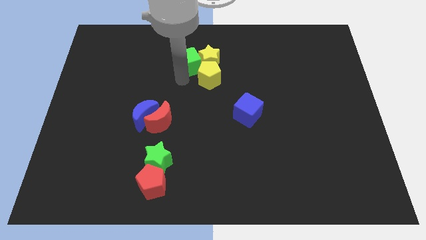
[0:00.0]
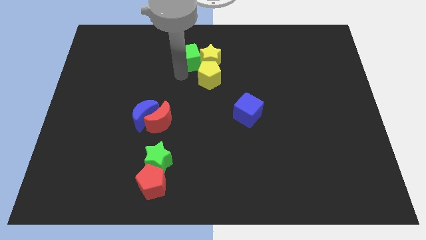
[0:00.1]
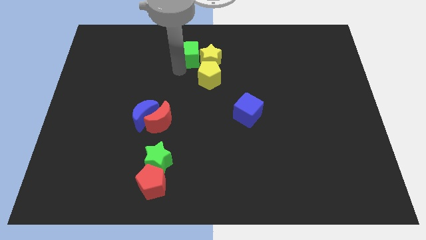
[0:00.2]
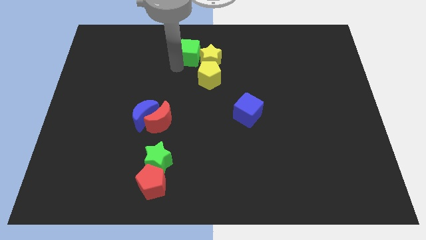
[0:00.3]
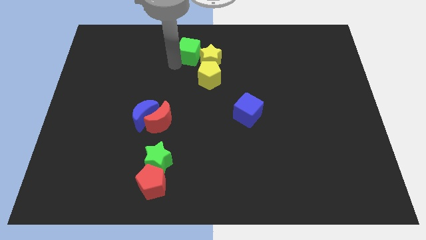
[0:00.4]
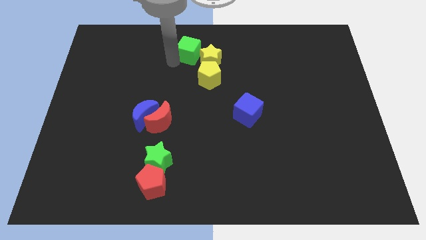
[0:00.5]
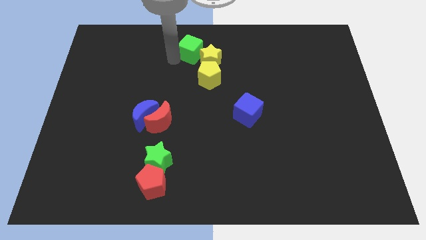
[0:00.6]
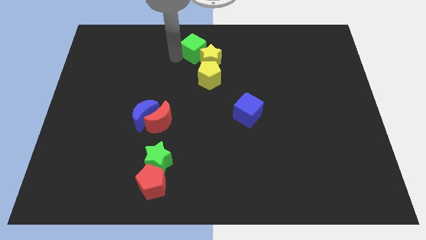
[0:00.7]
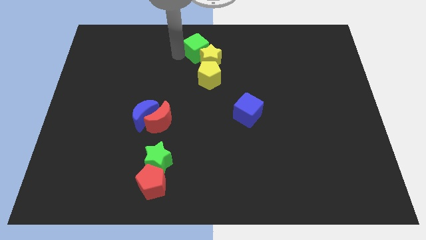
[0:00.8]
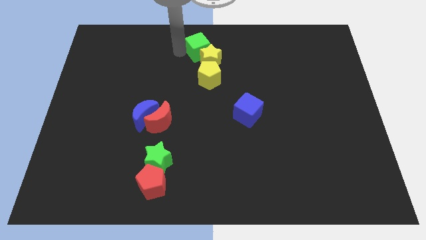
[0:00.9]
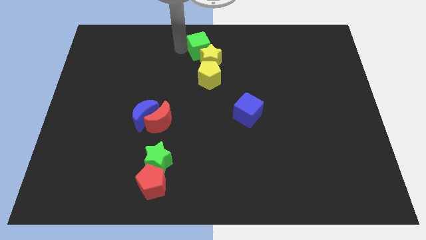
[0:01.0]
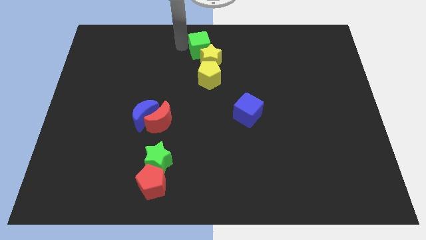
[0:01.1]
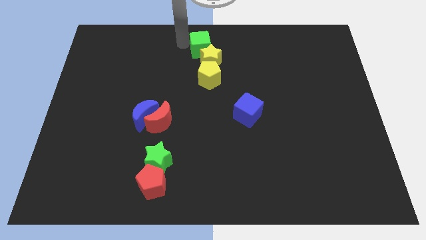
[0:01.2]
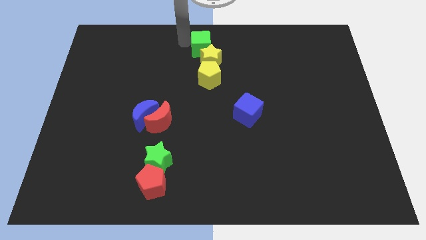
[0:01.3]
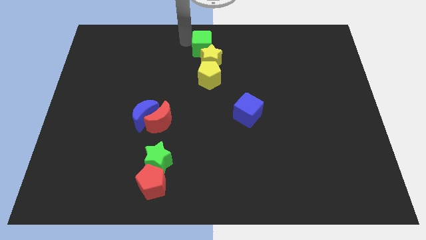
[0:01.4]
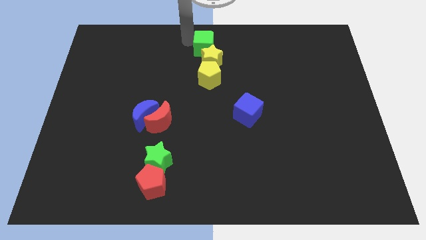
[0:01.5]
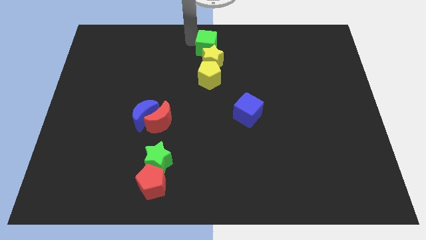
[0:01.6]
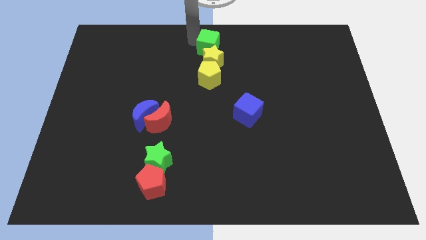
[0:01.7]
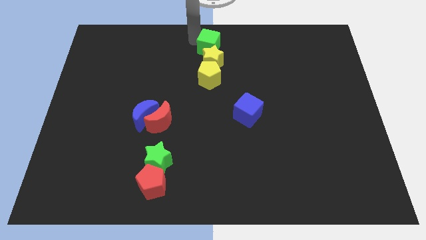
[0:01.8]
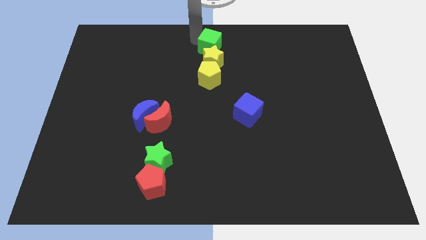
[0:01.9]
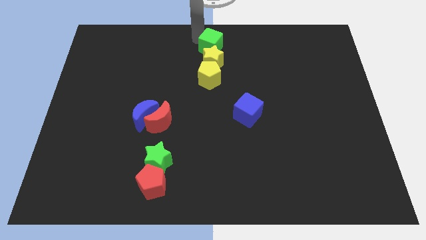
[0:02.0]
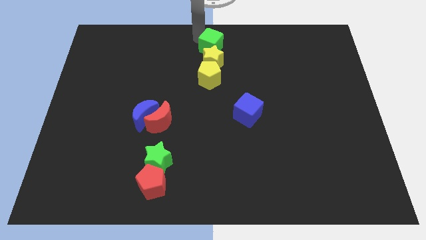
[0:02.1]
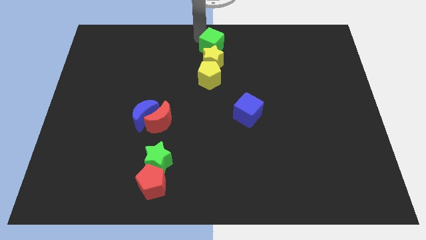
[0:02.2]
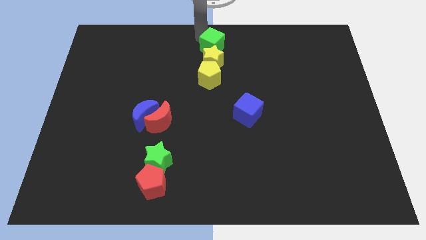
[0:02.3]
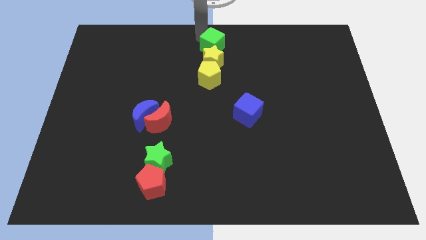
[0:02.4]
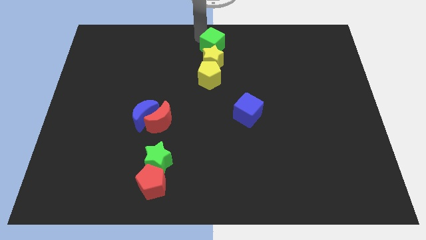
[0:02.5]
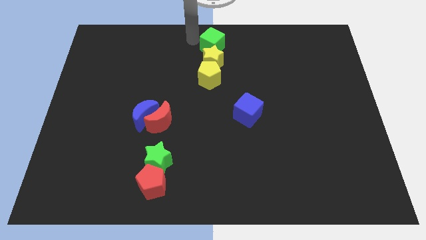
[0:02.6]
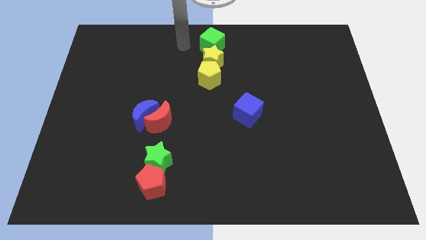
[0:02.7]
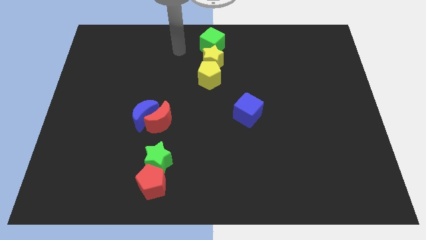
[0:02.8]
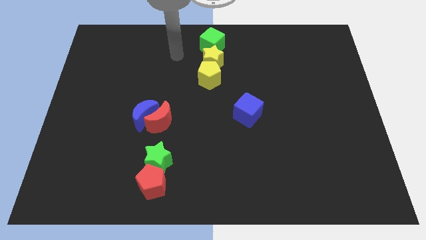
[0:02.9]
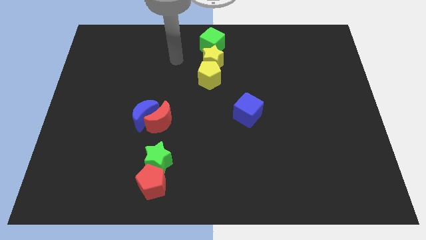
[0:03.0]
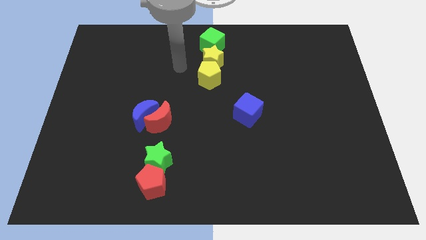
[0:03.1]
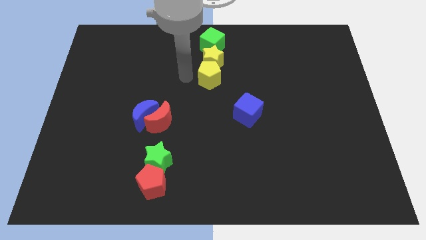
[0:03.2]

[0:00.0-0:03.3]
move the green cube towards up to the yellow star

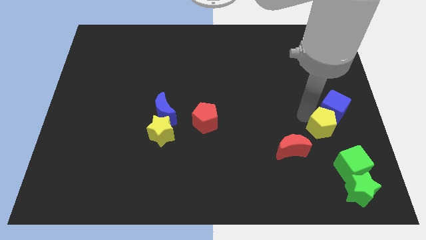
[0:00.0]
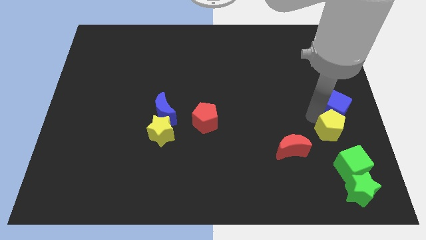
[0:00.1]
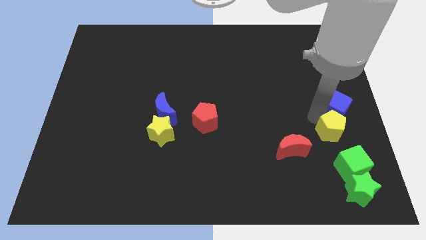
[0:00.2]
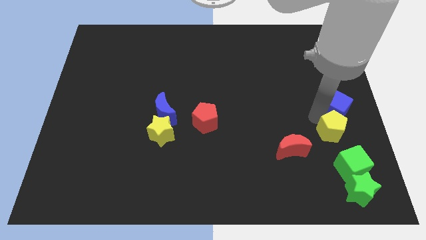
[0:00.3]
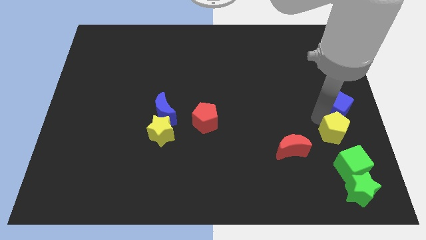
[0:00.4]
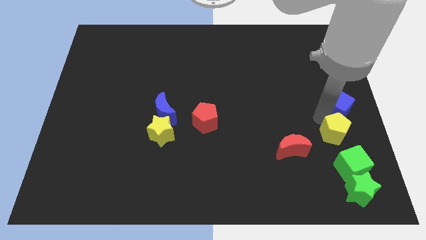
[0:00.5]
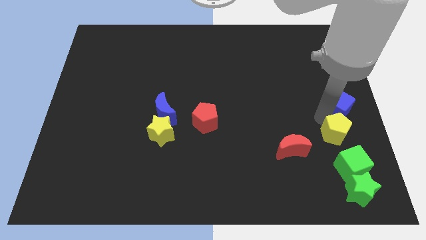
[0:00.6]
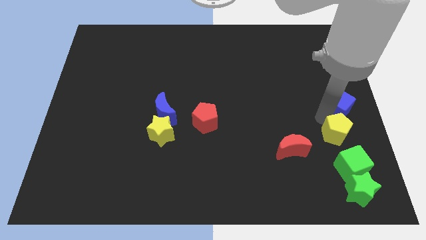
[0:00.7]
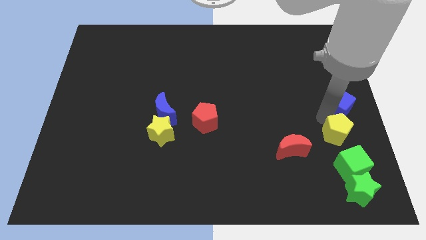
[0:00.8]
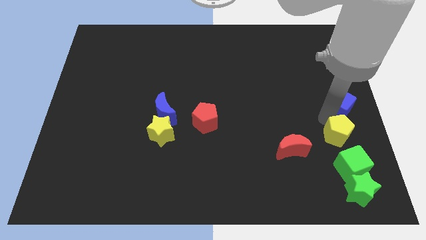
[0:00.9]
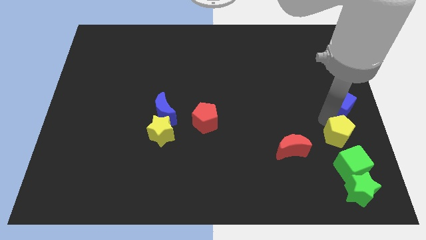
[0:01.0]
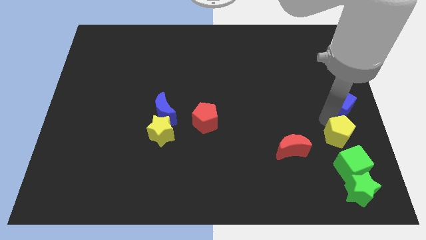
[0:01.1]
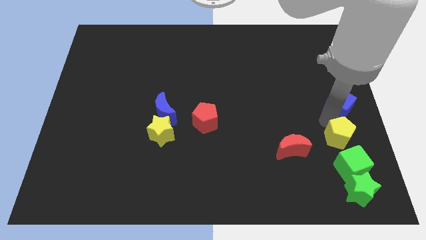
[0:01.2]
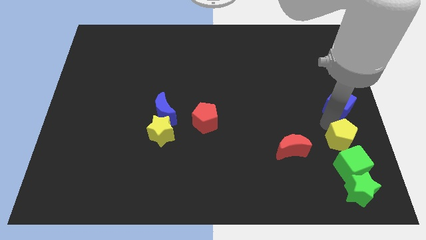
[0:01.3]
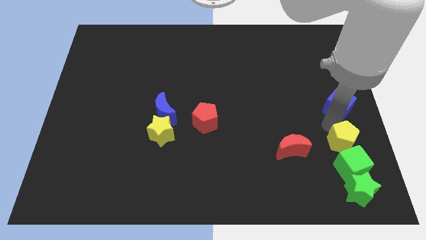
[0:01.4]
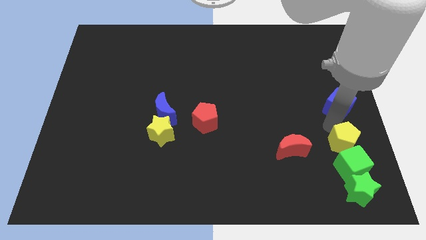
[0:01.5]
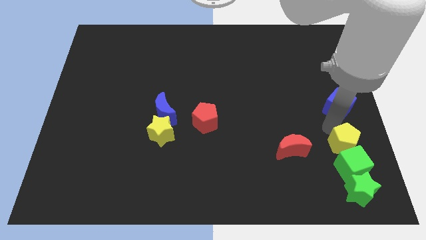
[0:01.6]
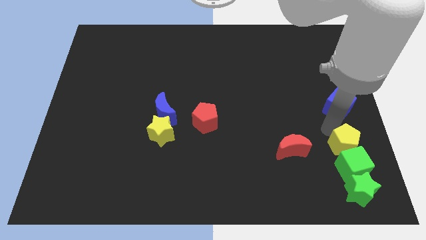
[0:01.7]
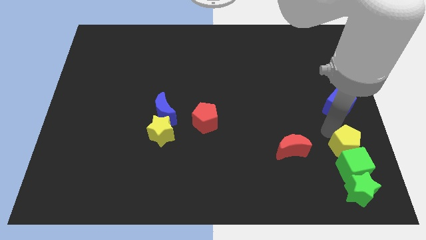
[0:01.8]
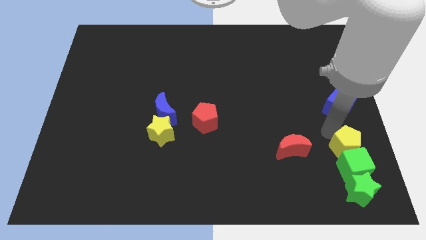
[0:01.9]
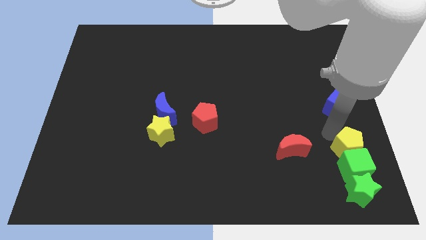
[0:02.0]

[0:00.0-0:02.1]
add yellow pentagon into green cube

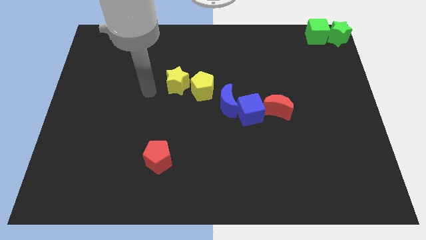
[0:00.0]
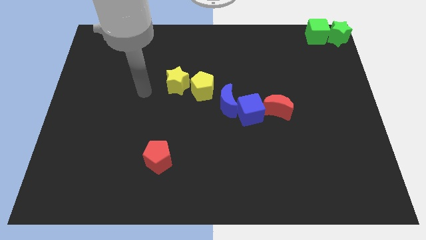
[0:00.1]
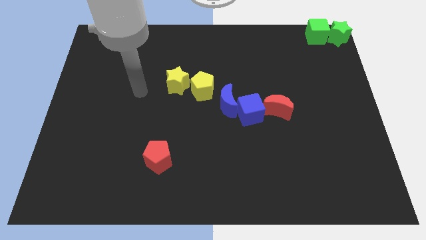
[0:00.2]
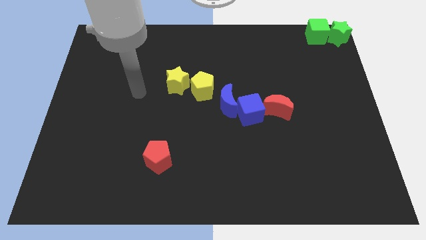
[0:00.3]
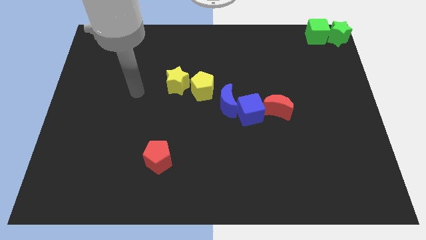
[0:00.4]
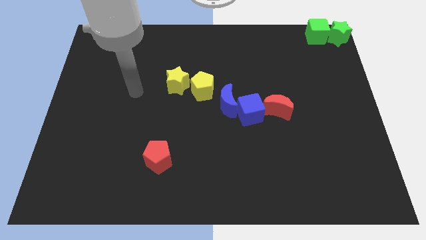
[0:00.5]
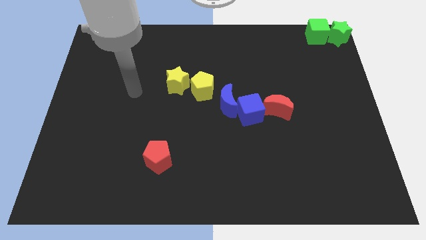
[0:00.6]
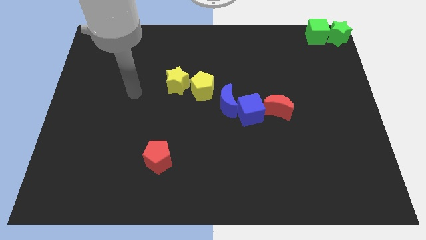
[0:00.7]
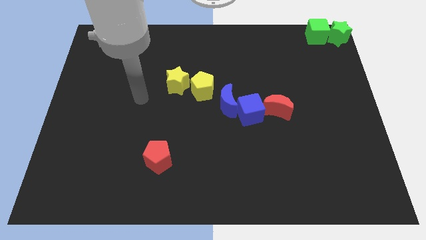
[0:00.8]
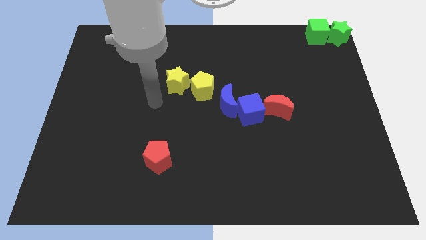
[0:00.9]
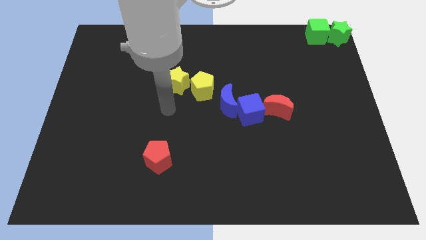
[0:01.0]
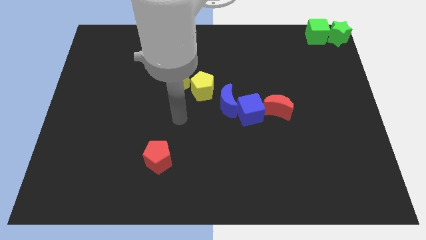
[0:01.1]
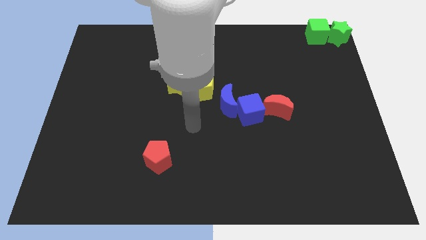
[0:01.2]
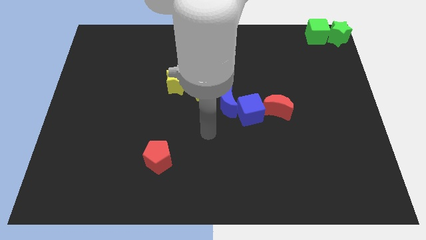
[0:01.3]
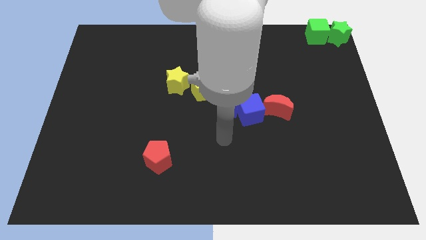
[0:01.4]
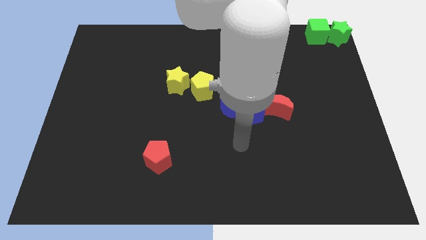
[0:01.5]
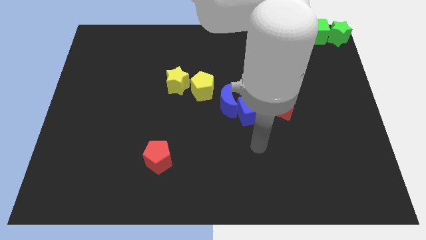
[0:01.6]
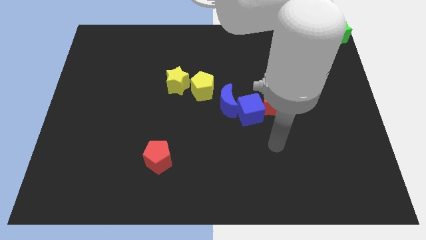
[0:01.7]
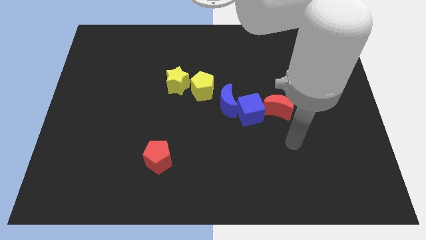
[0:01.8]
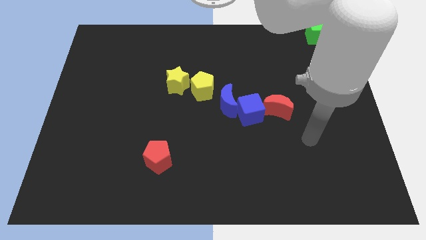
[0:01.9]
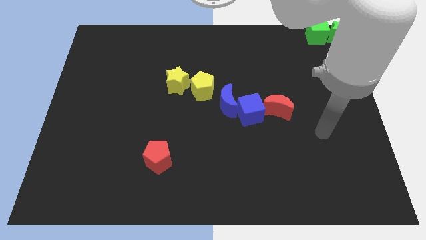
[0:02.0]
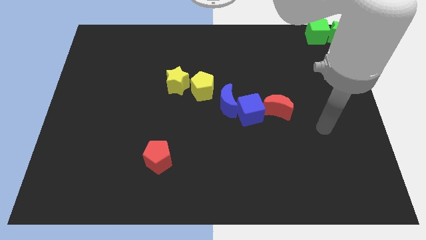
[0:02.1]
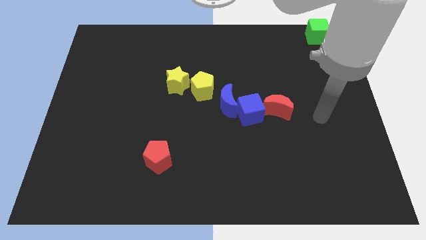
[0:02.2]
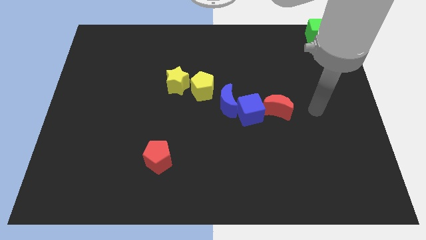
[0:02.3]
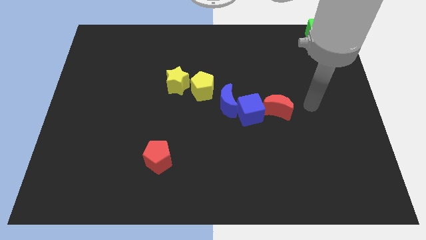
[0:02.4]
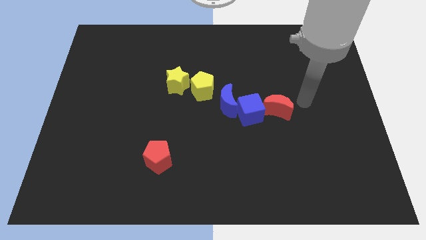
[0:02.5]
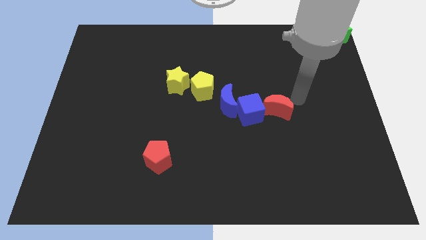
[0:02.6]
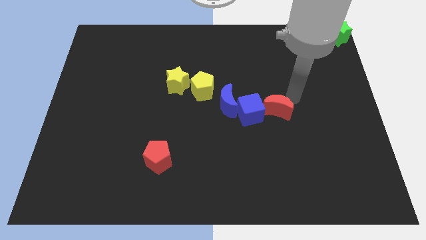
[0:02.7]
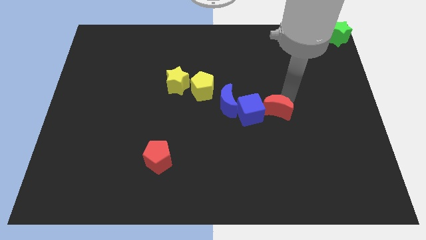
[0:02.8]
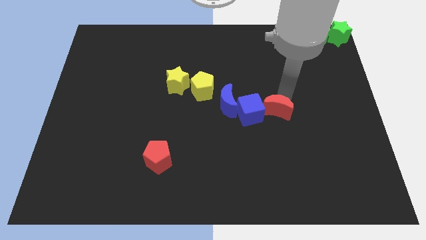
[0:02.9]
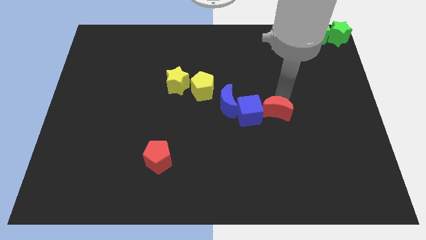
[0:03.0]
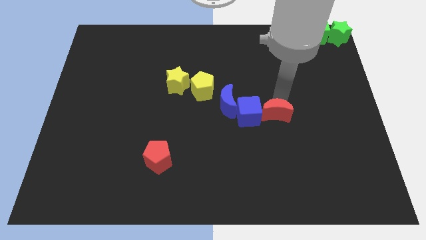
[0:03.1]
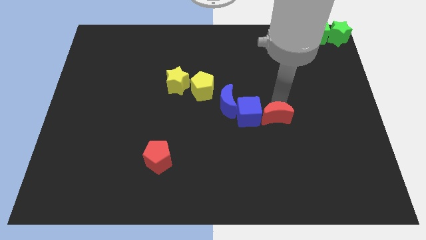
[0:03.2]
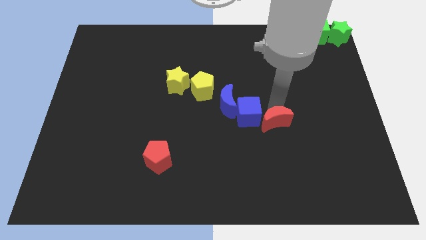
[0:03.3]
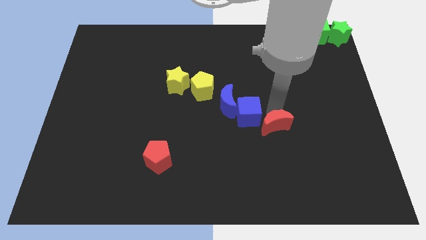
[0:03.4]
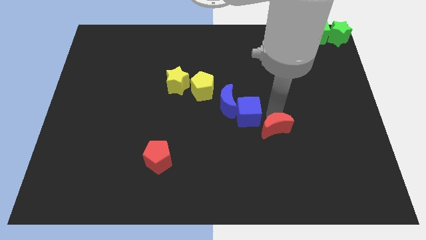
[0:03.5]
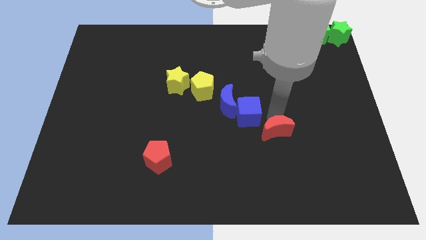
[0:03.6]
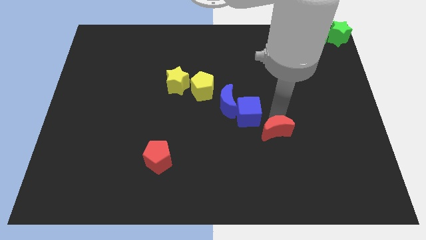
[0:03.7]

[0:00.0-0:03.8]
go and separate the red crescent from the blue cube
